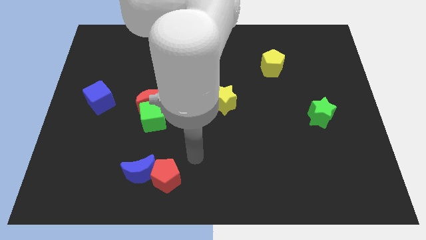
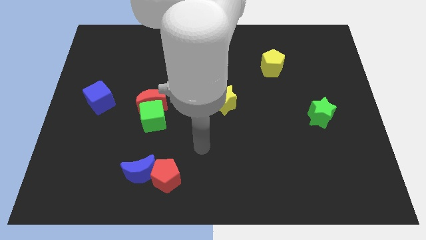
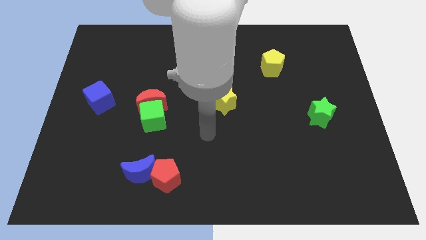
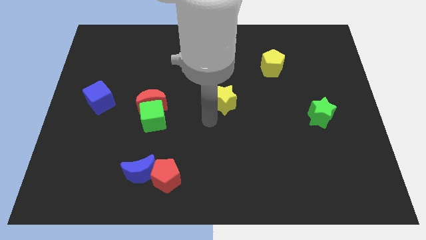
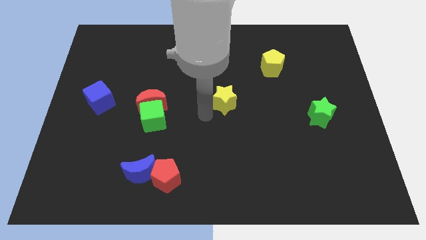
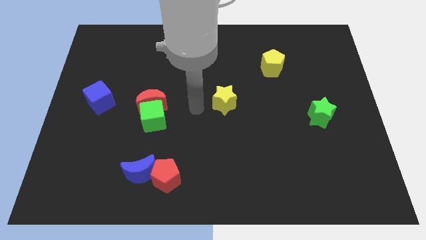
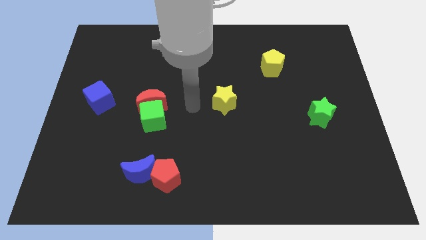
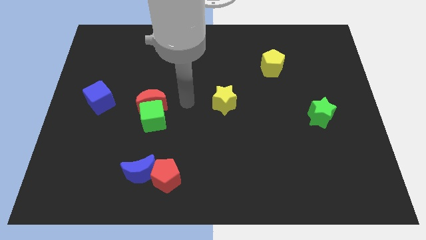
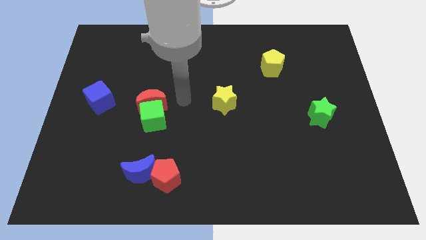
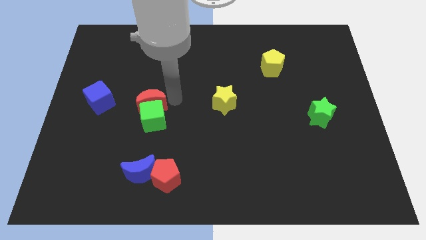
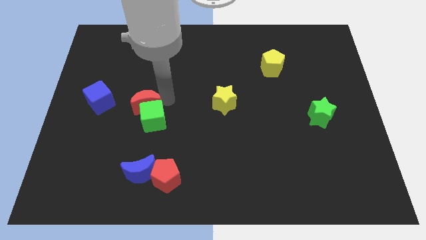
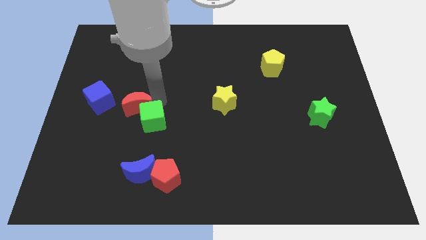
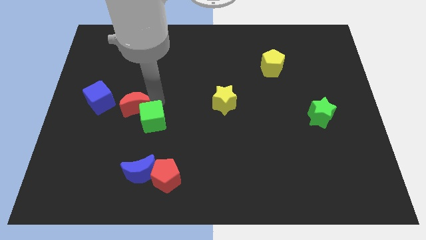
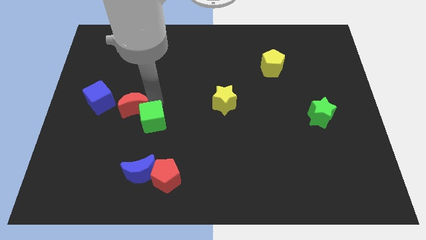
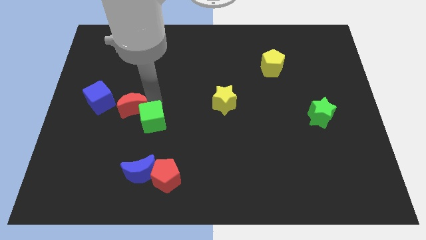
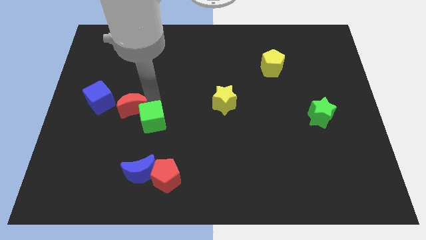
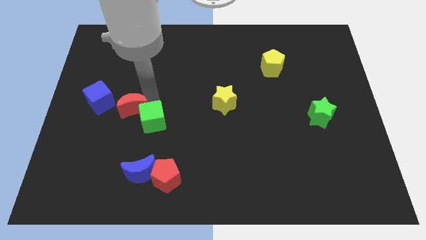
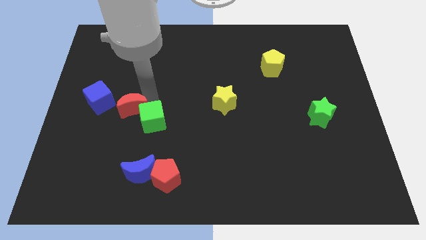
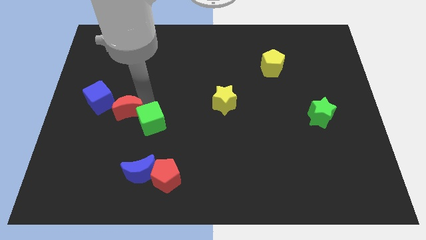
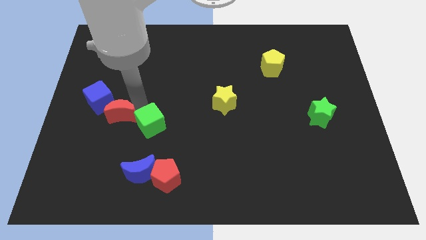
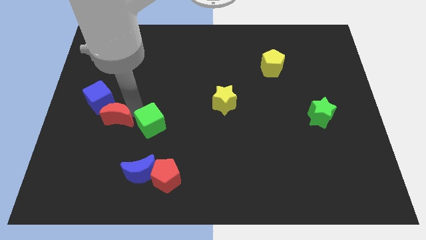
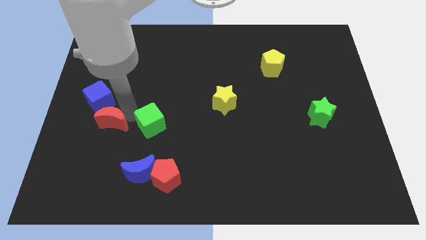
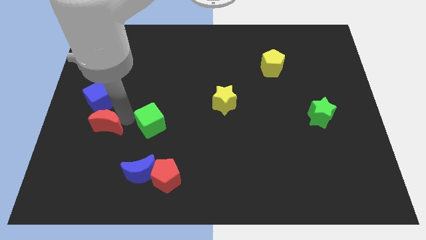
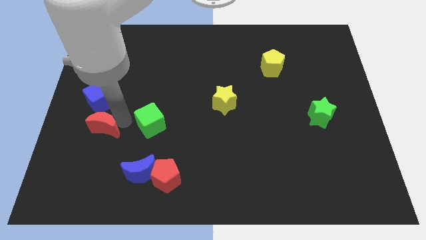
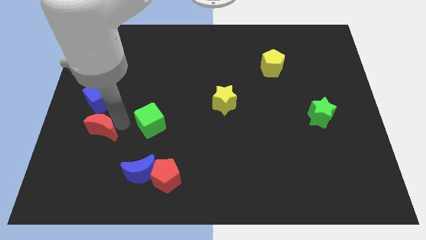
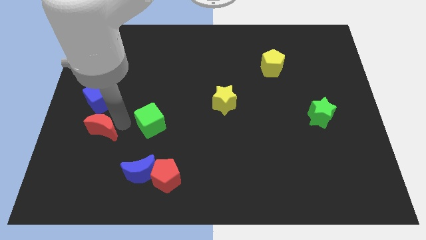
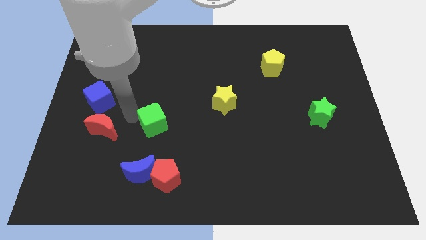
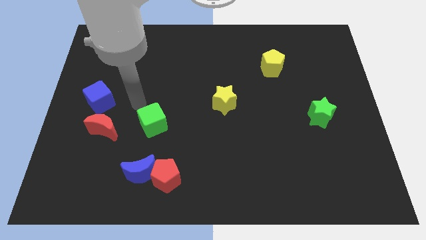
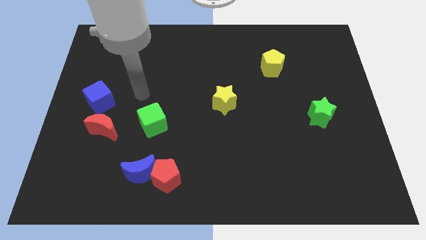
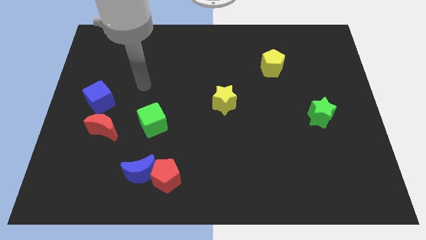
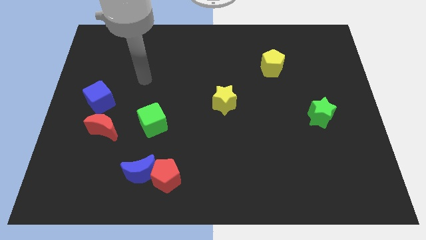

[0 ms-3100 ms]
separate the red moon and green cube

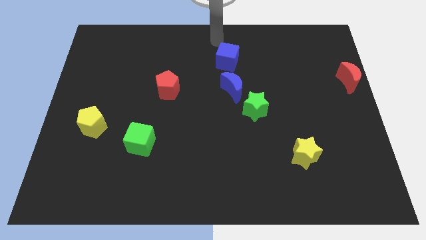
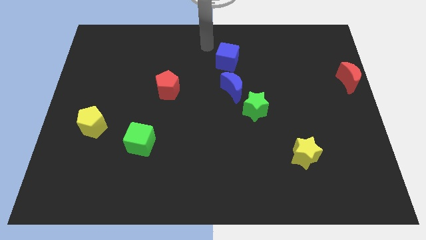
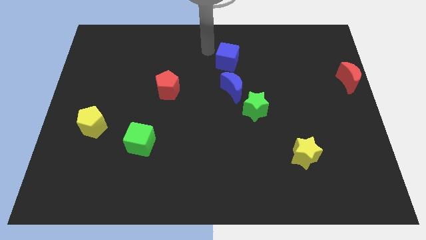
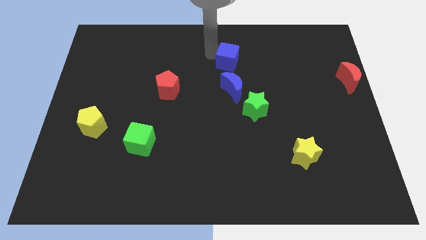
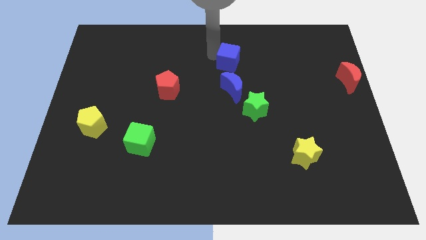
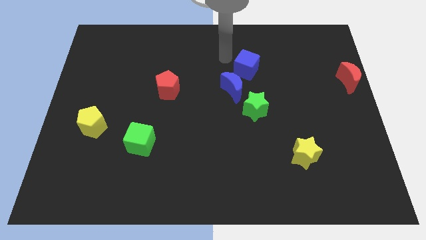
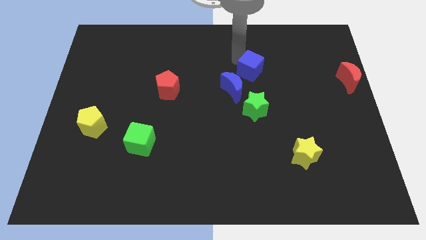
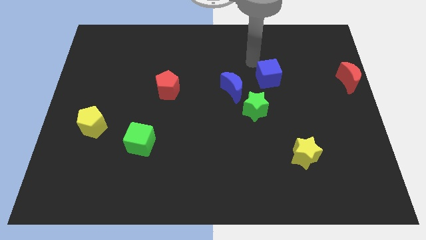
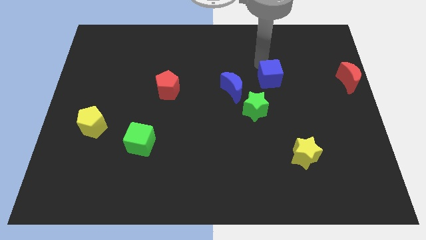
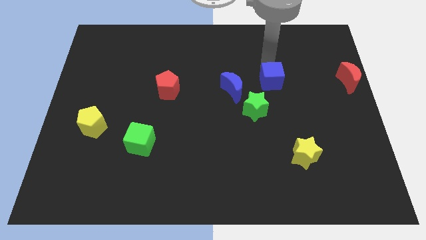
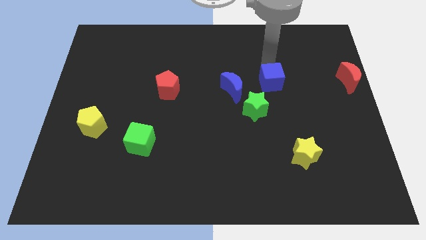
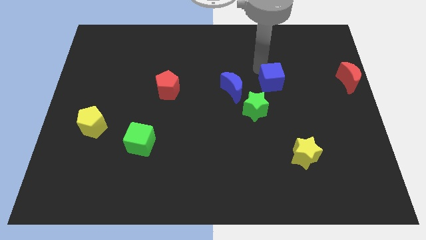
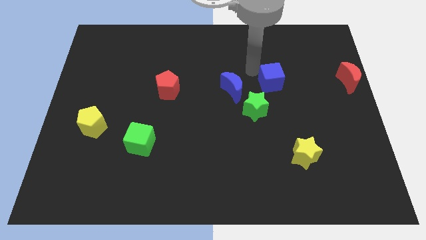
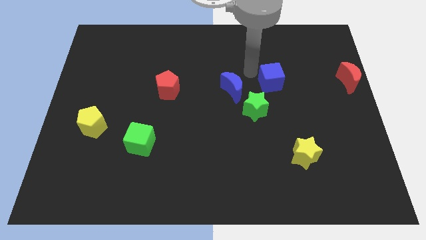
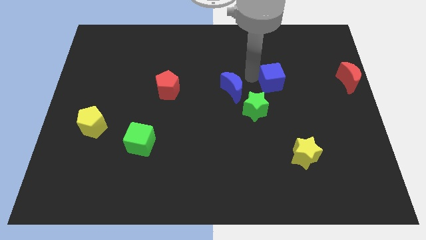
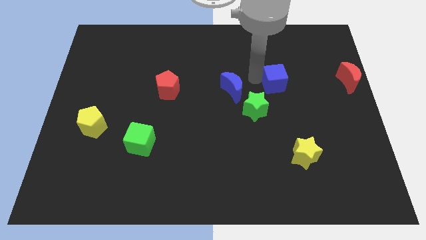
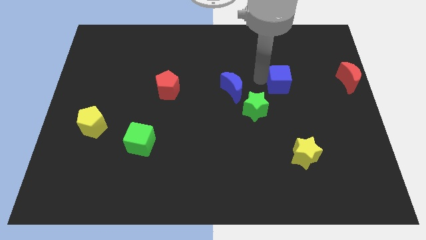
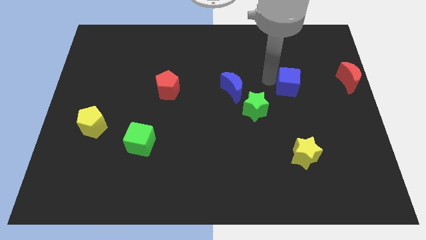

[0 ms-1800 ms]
move the blue cube to the top right of the green star

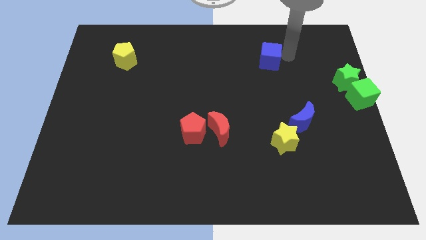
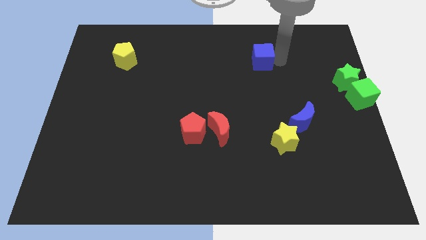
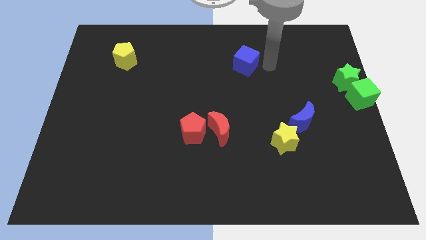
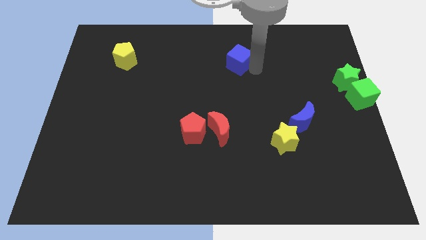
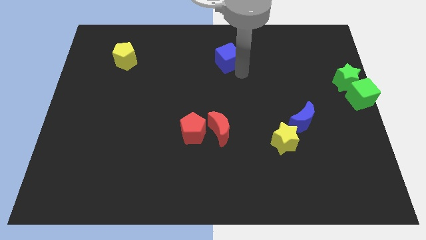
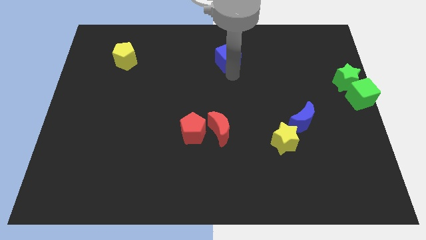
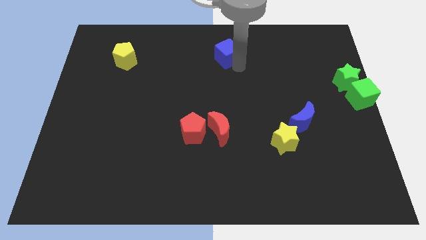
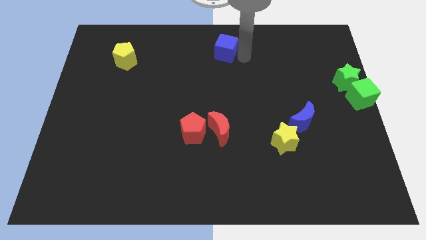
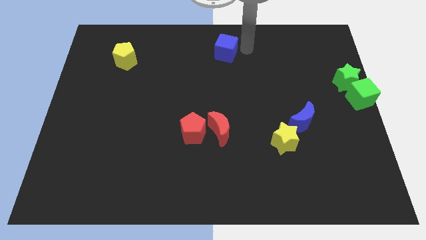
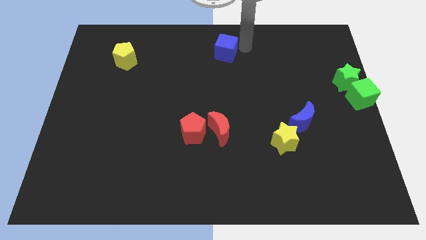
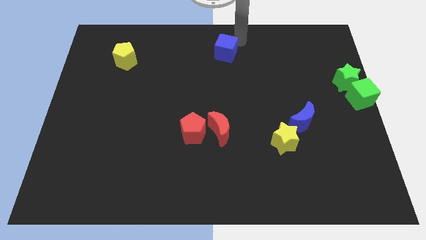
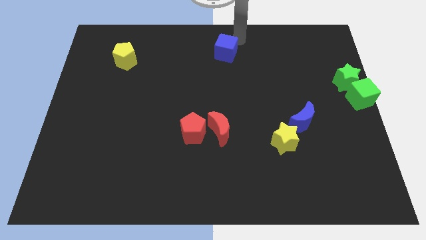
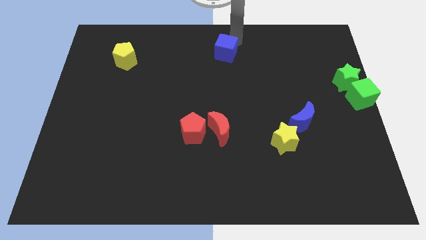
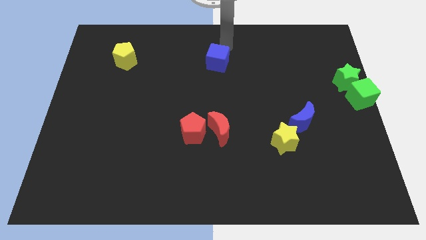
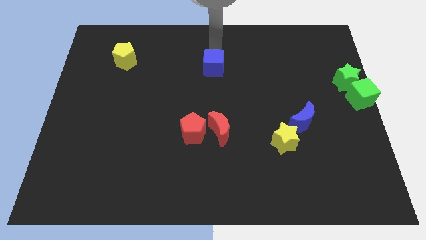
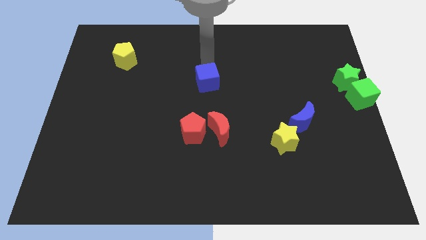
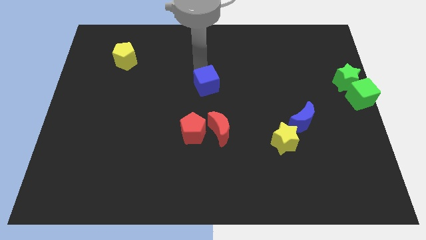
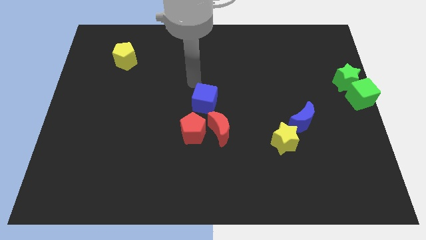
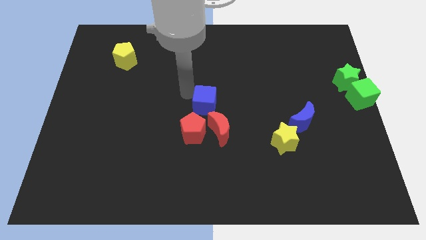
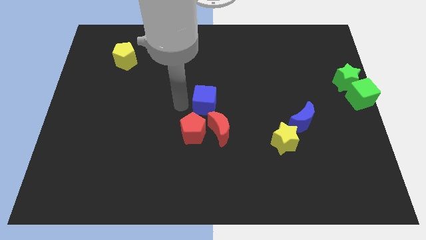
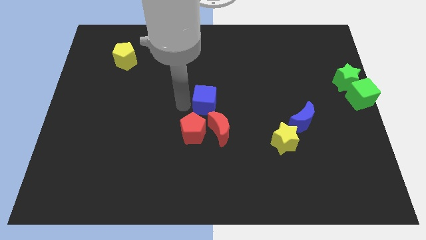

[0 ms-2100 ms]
move the blue cube to the center of the board

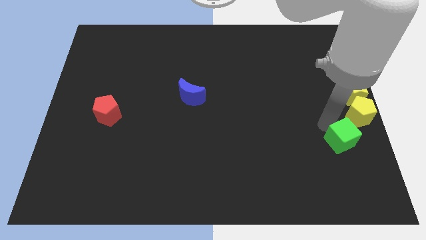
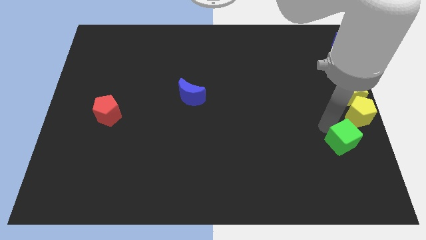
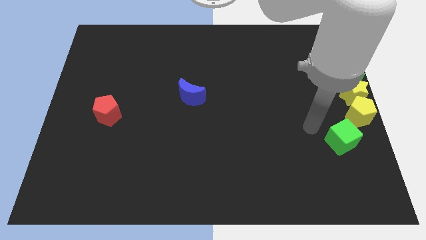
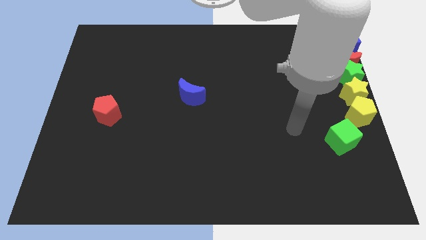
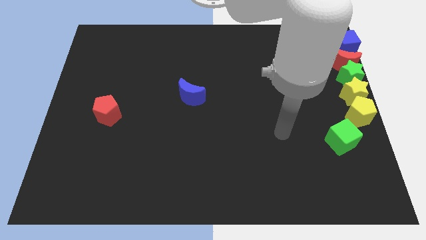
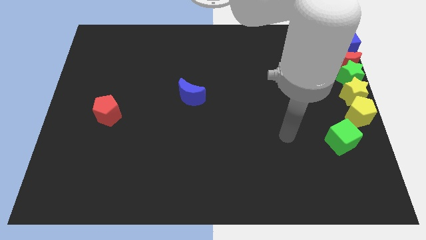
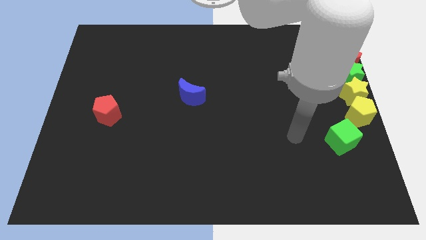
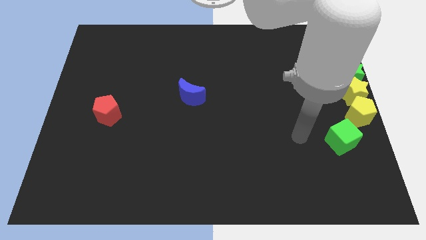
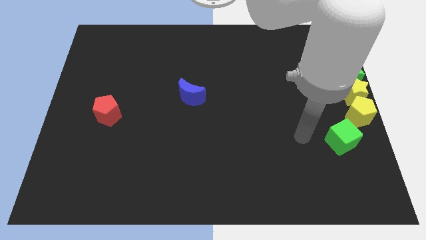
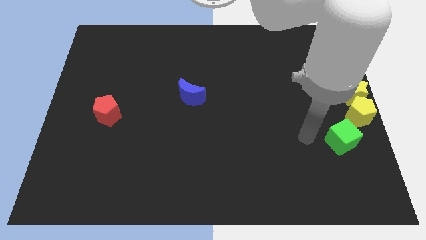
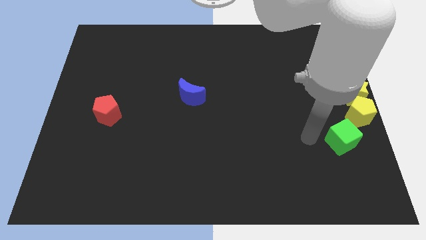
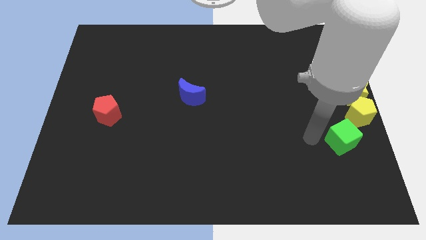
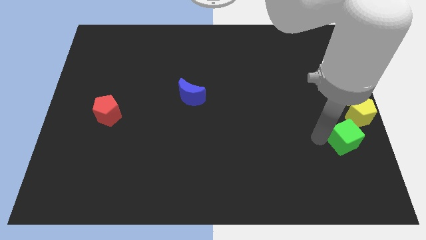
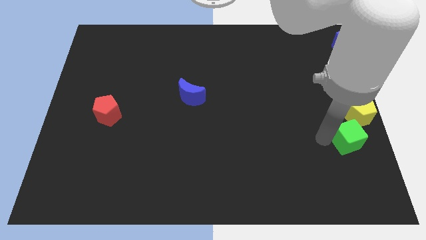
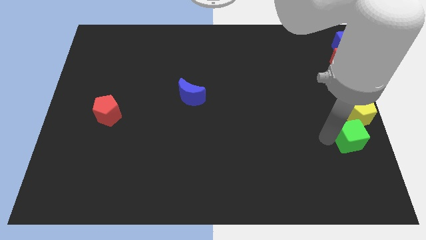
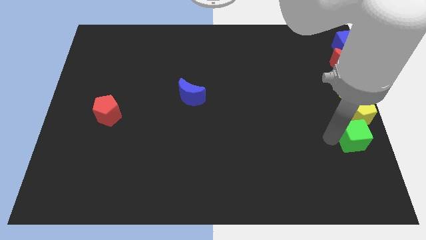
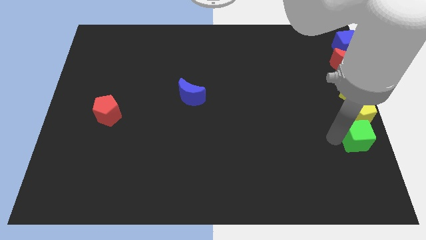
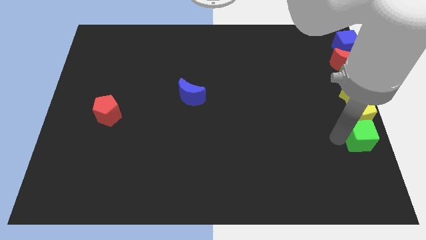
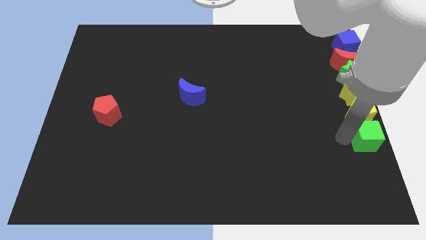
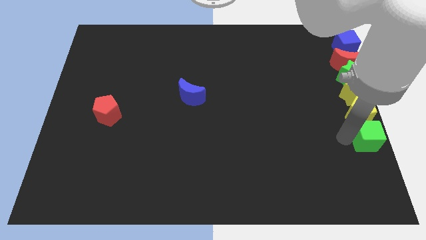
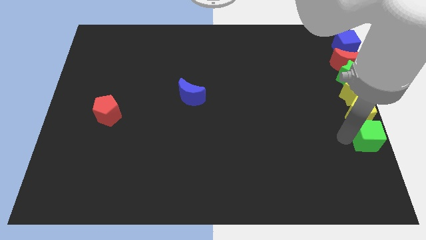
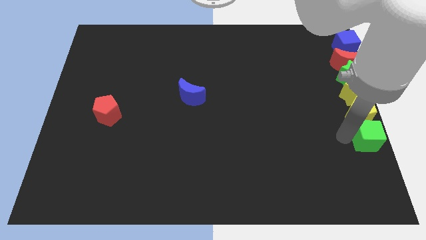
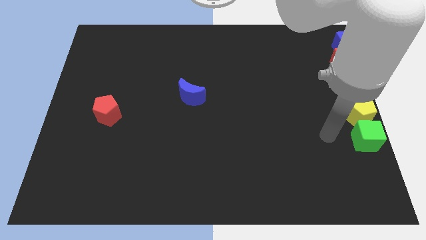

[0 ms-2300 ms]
place green cube below to the yellow pentagon
